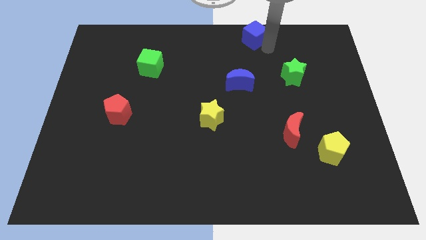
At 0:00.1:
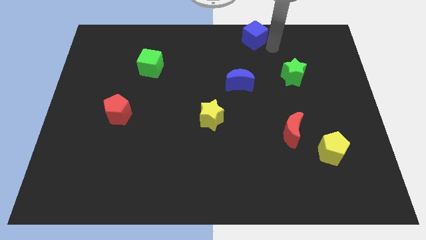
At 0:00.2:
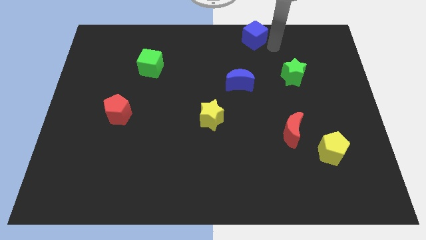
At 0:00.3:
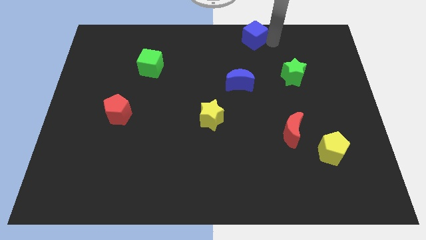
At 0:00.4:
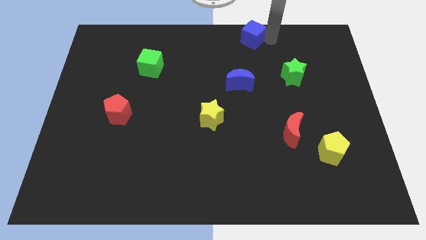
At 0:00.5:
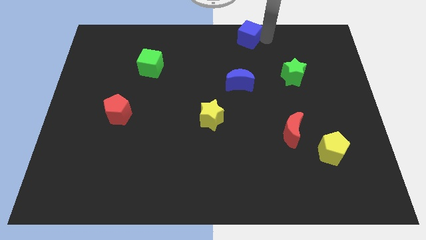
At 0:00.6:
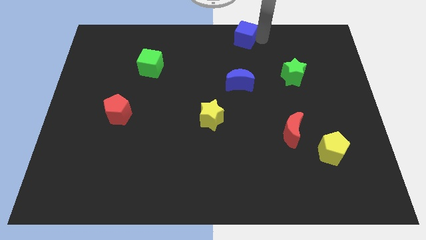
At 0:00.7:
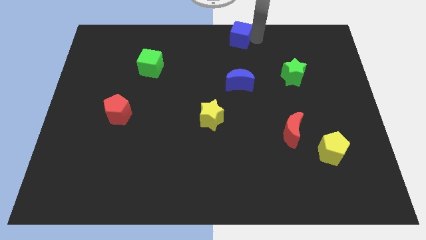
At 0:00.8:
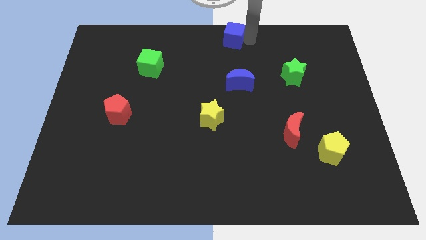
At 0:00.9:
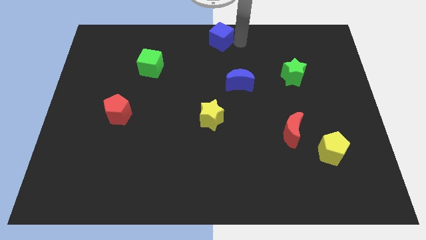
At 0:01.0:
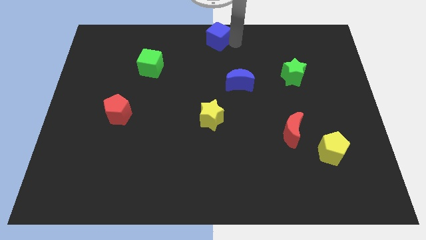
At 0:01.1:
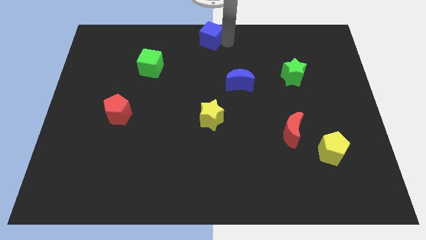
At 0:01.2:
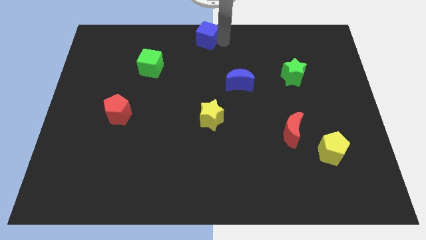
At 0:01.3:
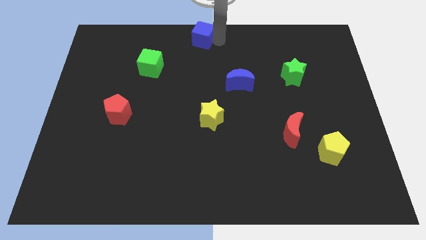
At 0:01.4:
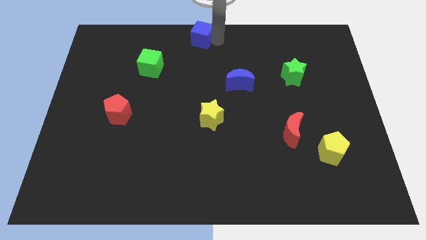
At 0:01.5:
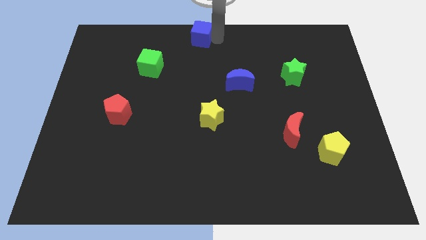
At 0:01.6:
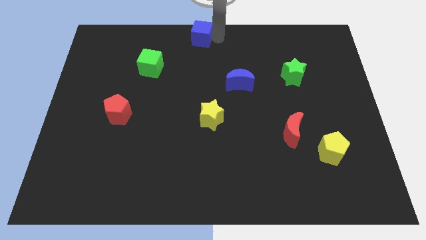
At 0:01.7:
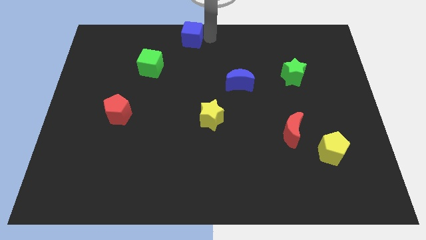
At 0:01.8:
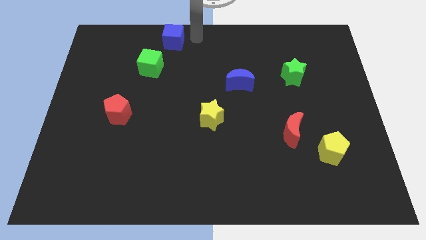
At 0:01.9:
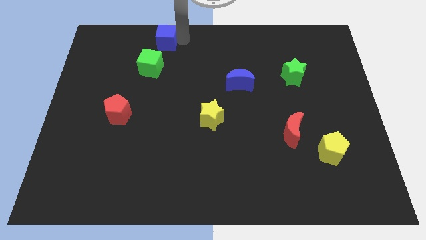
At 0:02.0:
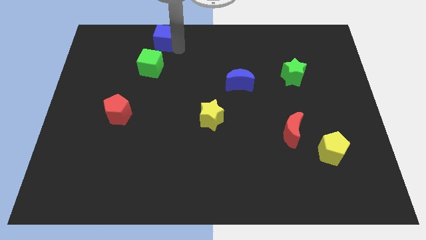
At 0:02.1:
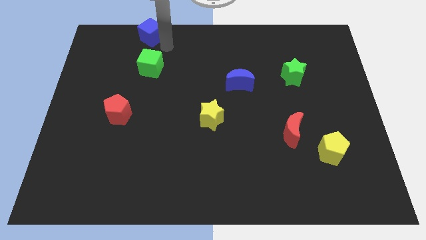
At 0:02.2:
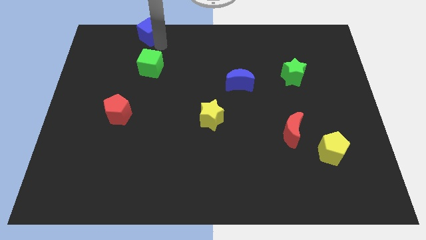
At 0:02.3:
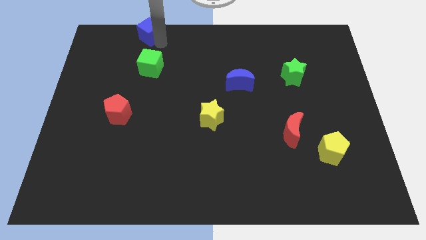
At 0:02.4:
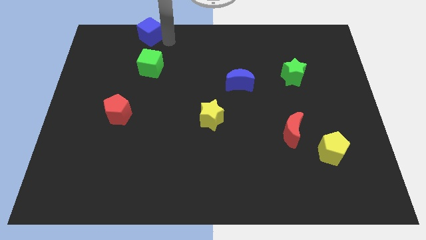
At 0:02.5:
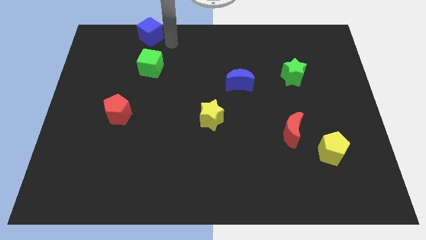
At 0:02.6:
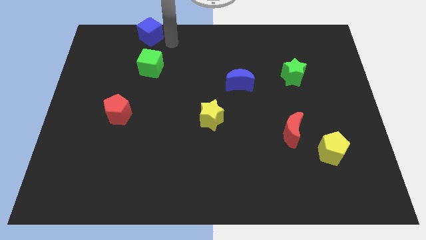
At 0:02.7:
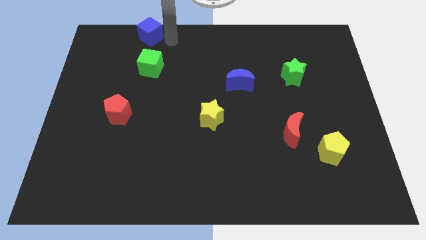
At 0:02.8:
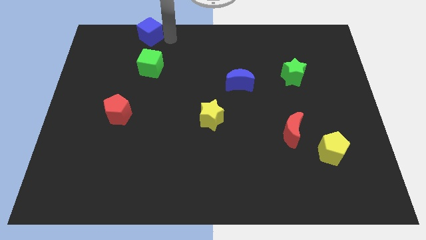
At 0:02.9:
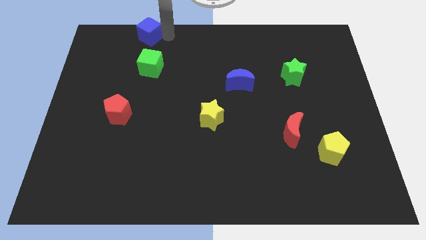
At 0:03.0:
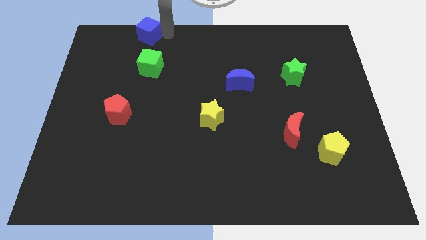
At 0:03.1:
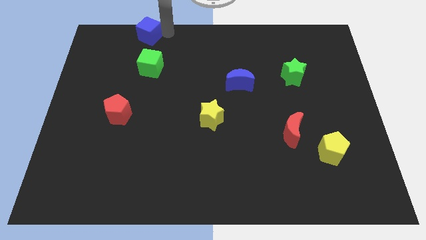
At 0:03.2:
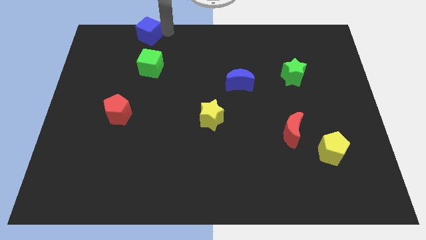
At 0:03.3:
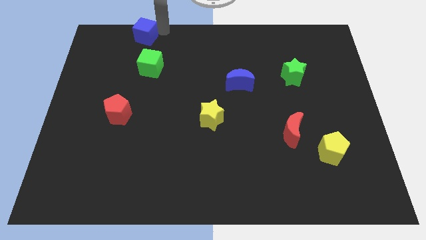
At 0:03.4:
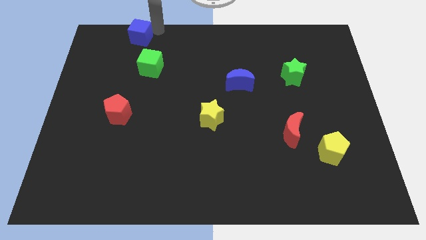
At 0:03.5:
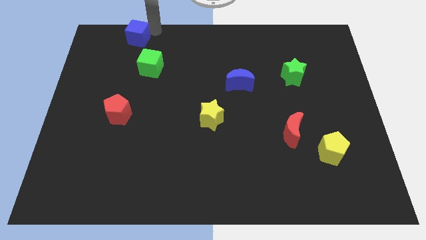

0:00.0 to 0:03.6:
place the blue cube above the green cube

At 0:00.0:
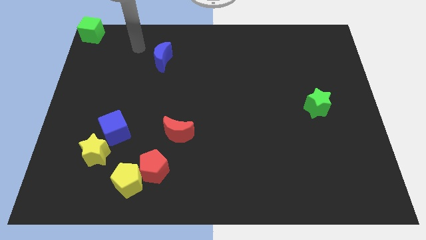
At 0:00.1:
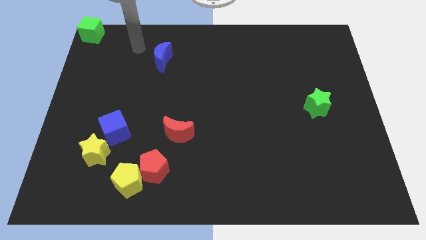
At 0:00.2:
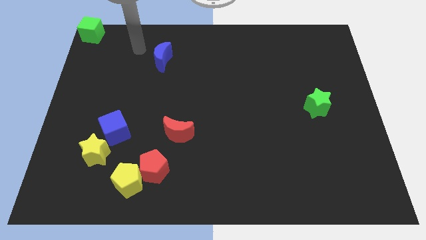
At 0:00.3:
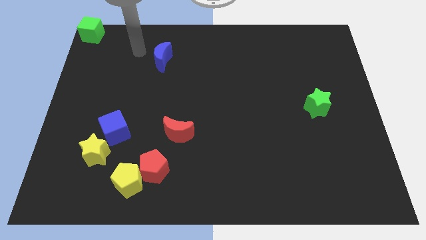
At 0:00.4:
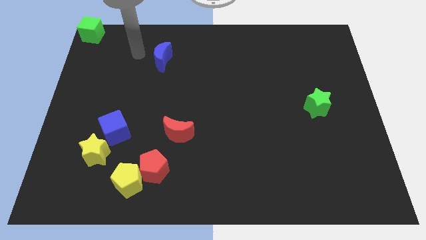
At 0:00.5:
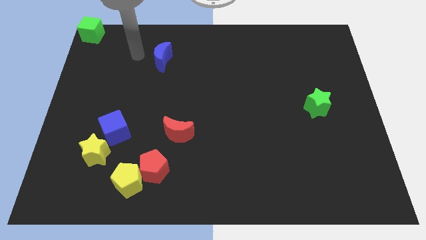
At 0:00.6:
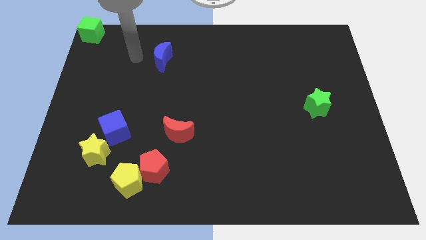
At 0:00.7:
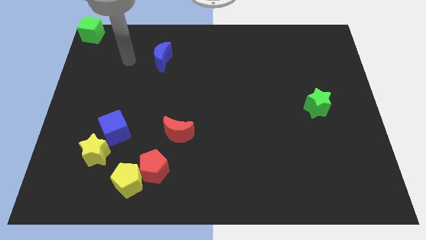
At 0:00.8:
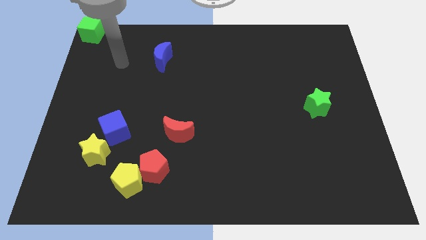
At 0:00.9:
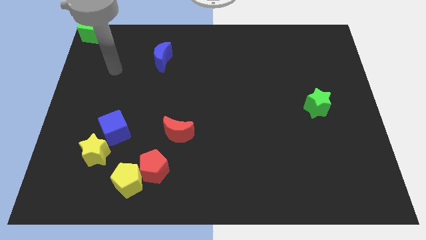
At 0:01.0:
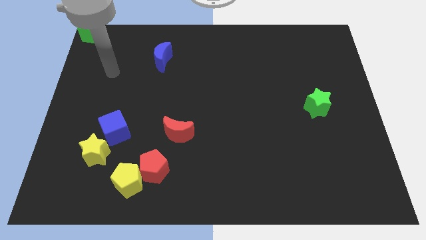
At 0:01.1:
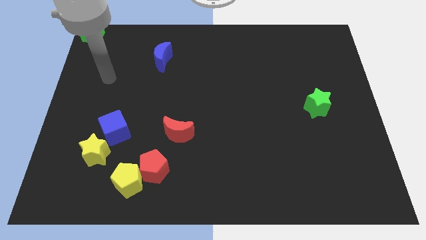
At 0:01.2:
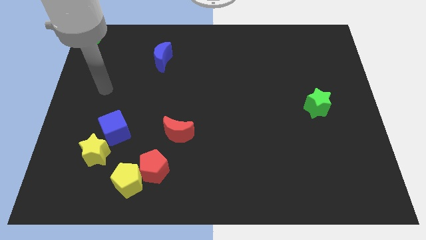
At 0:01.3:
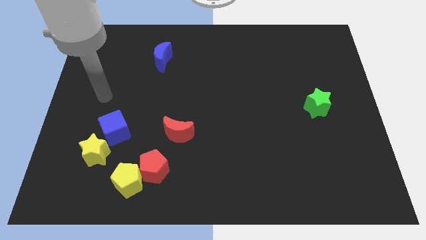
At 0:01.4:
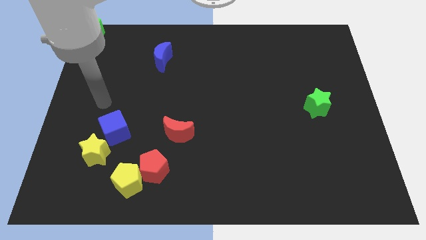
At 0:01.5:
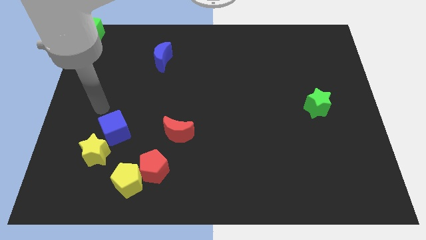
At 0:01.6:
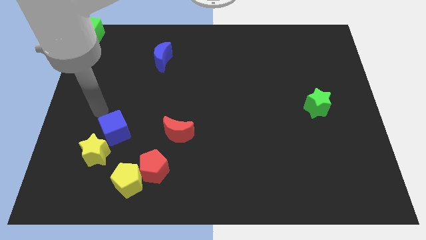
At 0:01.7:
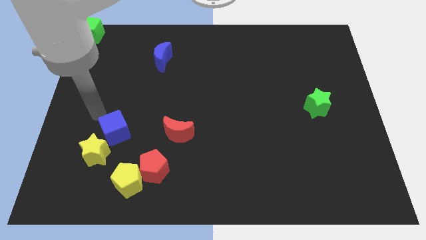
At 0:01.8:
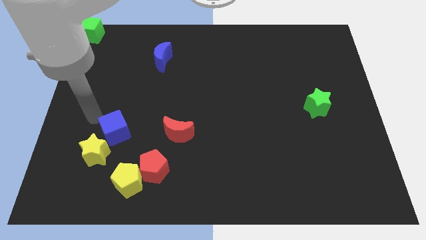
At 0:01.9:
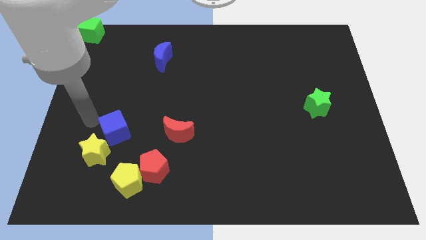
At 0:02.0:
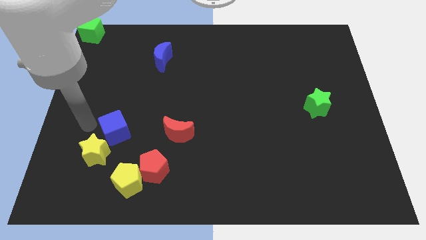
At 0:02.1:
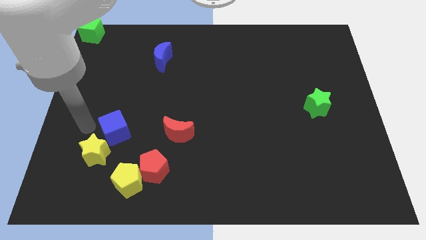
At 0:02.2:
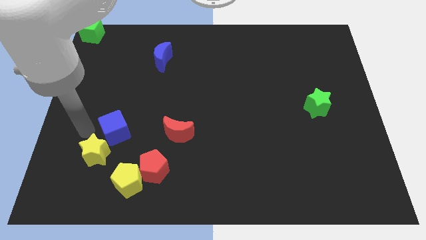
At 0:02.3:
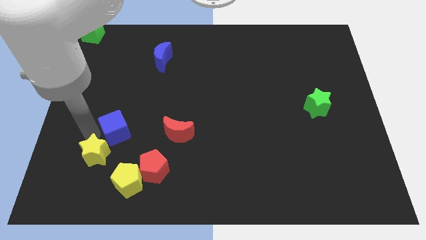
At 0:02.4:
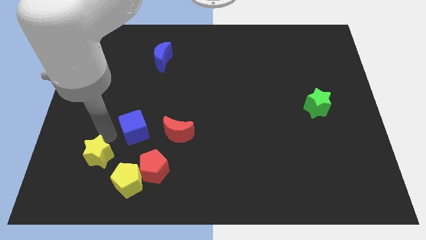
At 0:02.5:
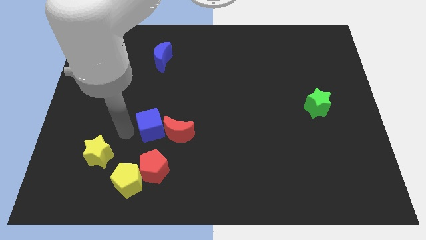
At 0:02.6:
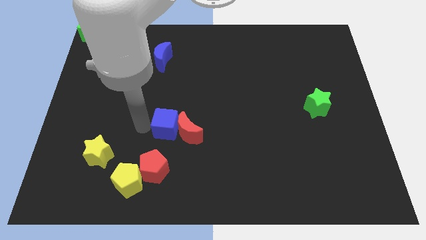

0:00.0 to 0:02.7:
push the blue cube into red crescent

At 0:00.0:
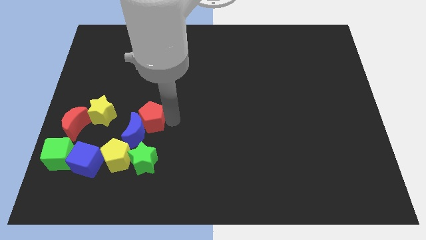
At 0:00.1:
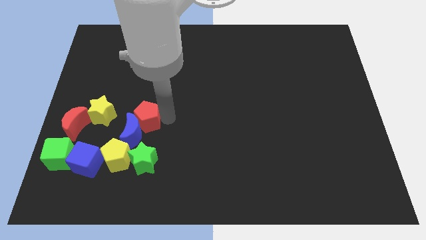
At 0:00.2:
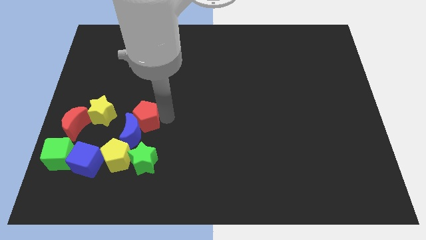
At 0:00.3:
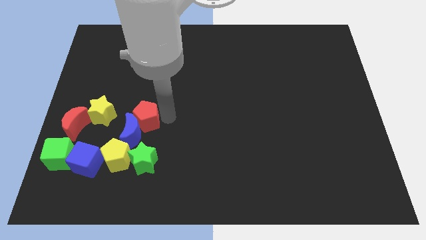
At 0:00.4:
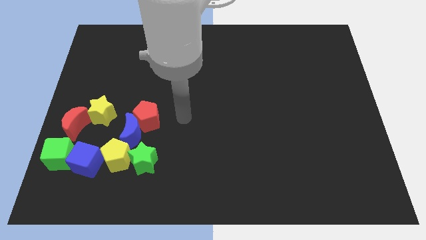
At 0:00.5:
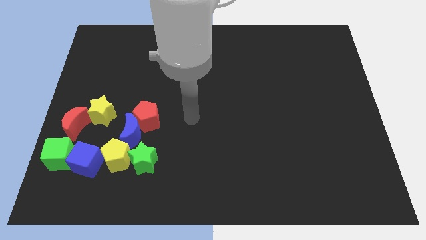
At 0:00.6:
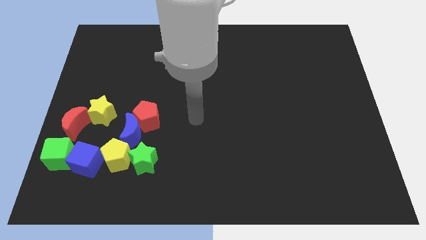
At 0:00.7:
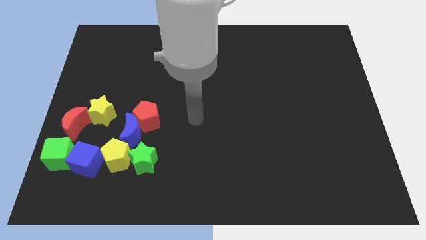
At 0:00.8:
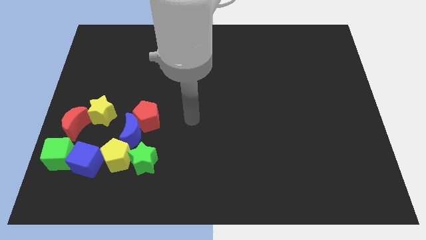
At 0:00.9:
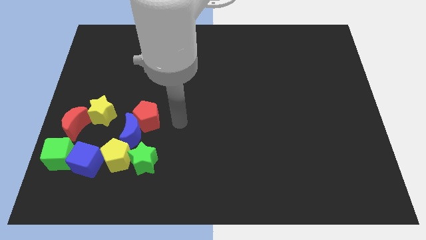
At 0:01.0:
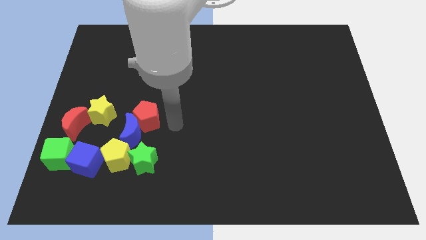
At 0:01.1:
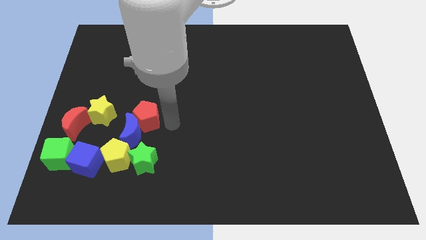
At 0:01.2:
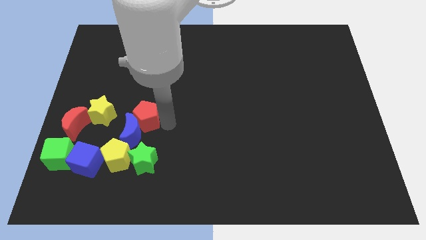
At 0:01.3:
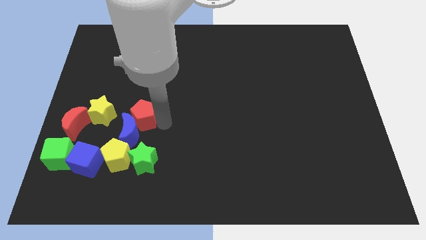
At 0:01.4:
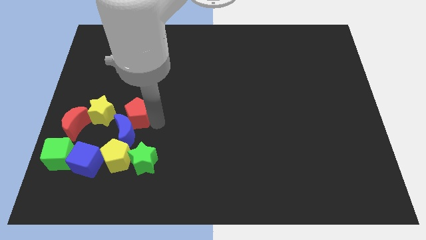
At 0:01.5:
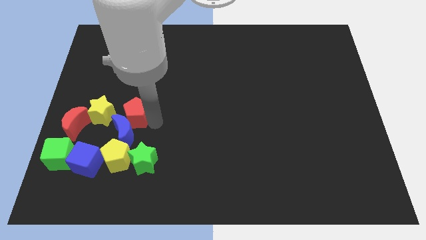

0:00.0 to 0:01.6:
push red pentagon into blue moon

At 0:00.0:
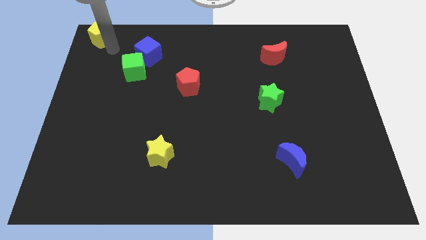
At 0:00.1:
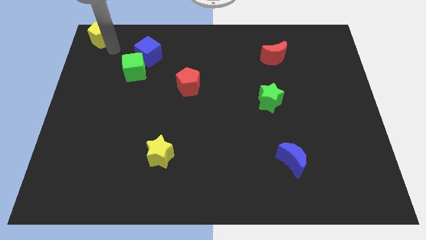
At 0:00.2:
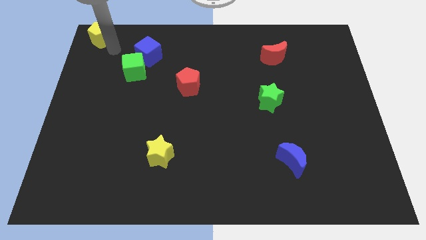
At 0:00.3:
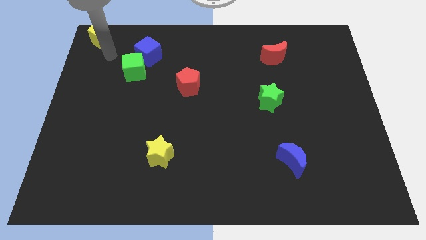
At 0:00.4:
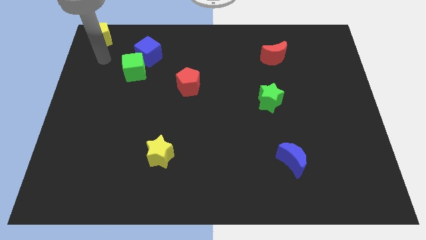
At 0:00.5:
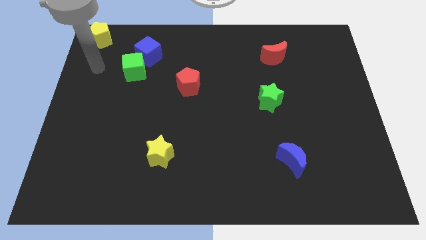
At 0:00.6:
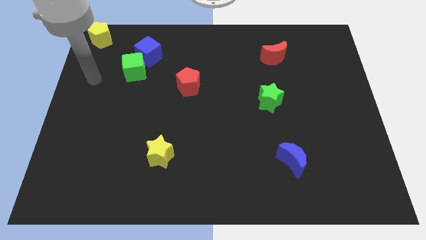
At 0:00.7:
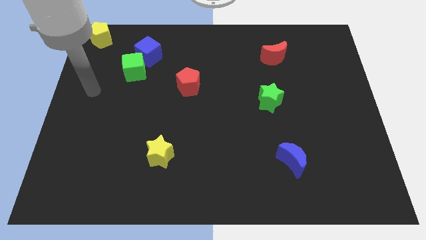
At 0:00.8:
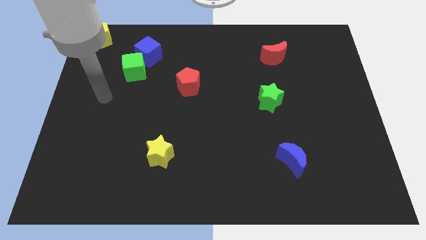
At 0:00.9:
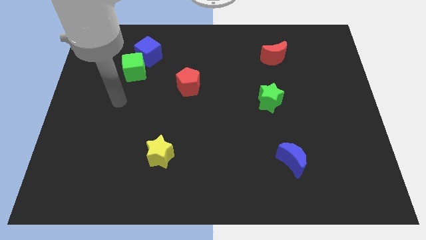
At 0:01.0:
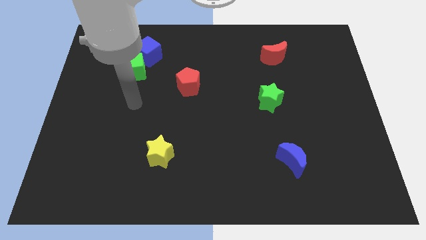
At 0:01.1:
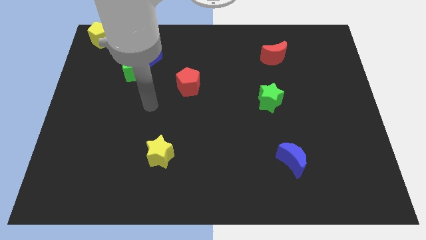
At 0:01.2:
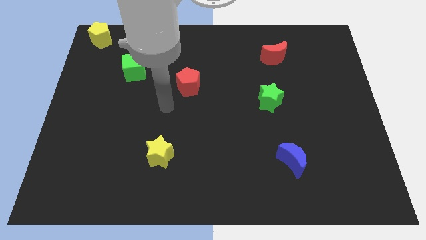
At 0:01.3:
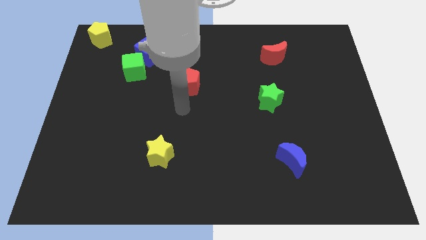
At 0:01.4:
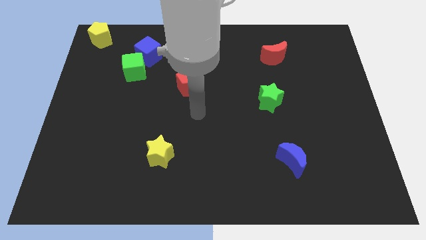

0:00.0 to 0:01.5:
place your arm at the bottom of red pentagon
